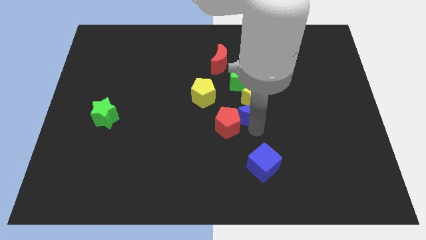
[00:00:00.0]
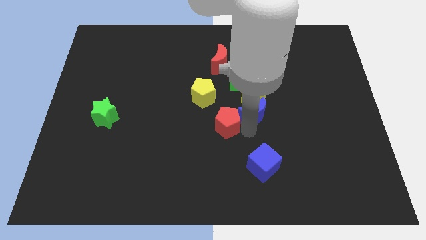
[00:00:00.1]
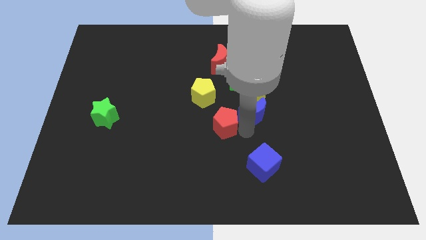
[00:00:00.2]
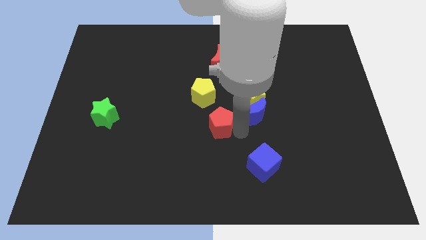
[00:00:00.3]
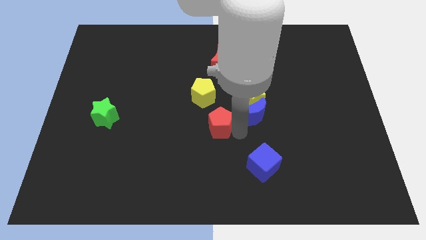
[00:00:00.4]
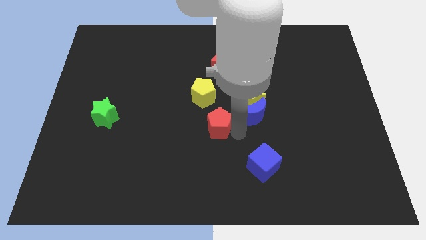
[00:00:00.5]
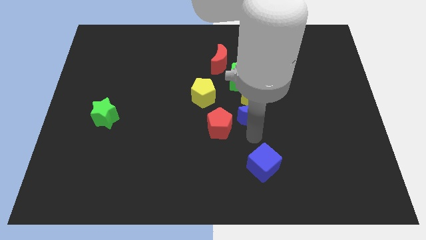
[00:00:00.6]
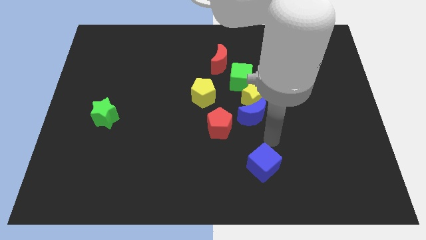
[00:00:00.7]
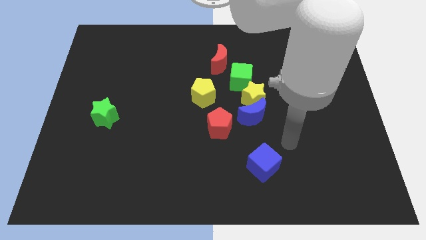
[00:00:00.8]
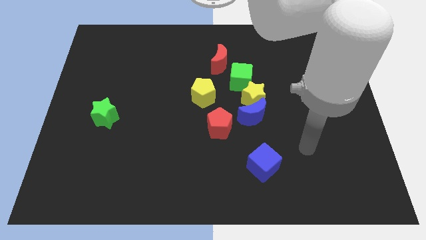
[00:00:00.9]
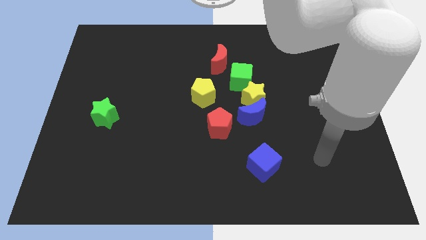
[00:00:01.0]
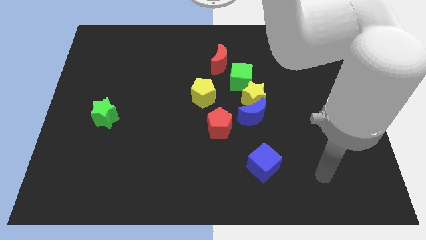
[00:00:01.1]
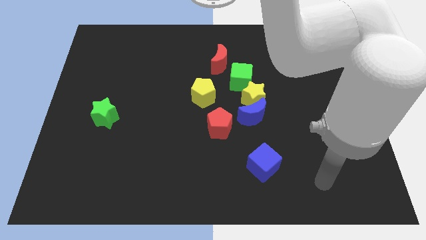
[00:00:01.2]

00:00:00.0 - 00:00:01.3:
push the red pentagon slightly to the left side of the blue crescent

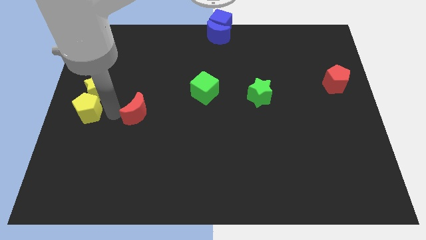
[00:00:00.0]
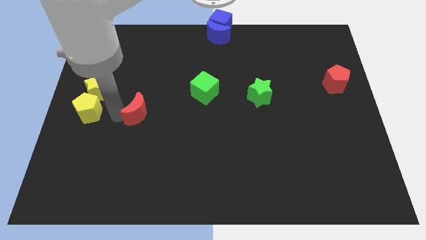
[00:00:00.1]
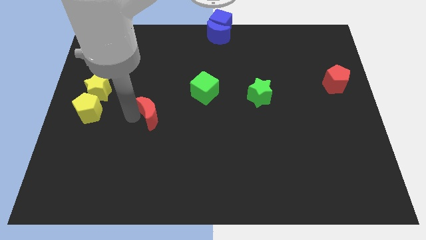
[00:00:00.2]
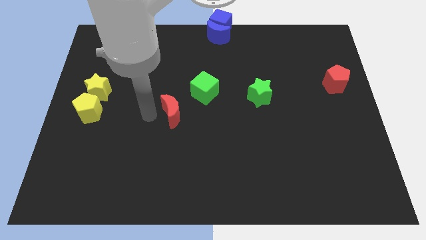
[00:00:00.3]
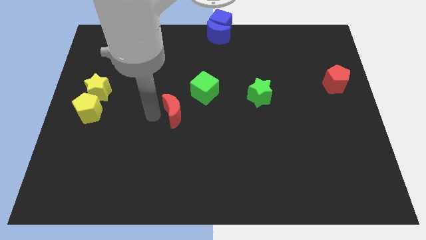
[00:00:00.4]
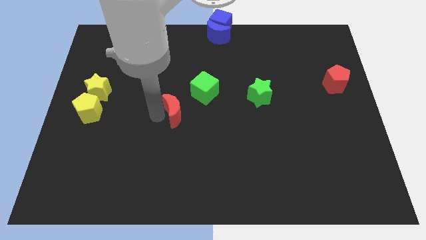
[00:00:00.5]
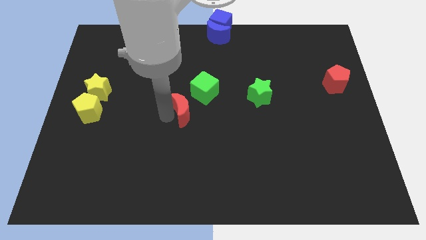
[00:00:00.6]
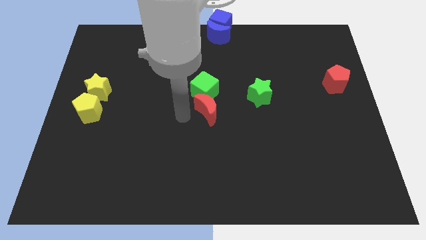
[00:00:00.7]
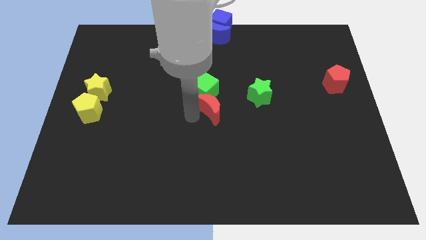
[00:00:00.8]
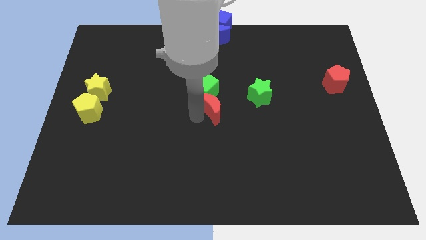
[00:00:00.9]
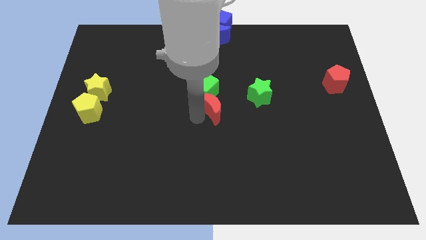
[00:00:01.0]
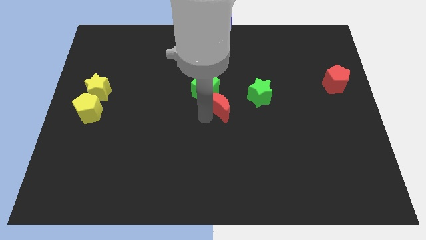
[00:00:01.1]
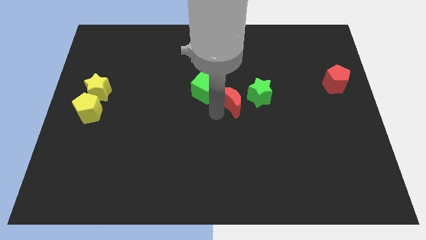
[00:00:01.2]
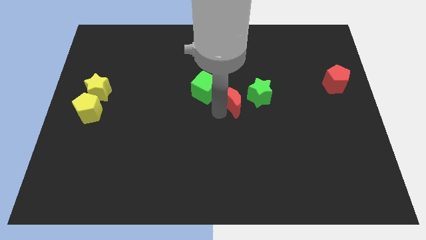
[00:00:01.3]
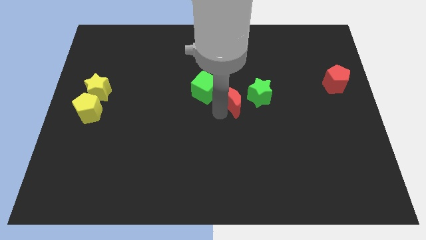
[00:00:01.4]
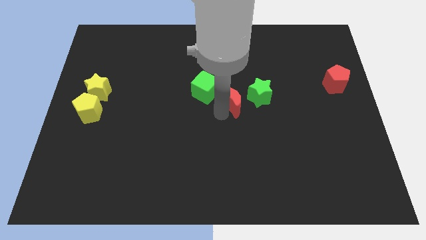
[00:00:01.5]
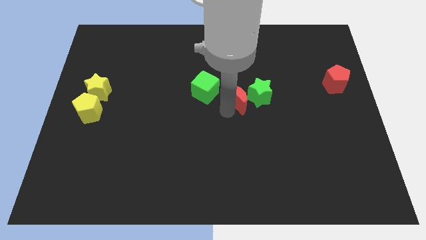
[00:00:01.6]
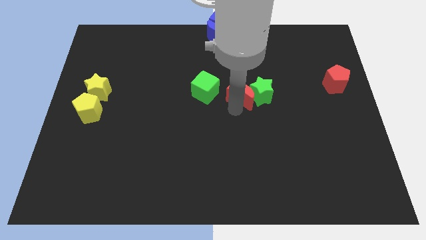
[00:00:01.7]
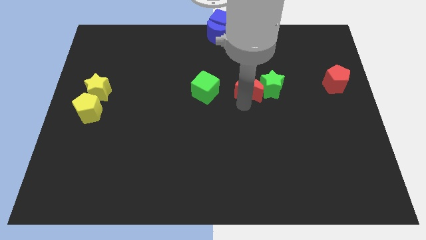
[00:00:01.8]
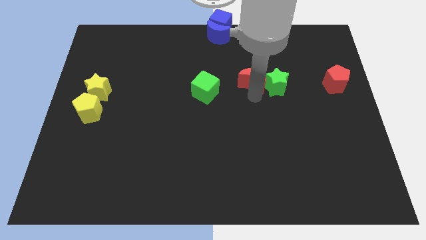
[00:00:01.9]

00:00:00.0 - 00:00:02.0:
push the red crescent into green star

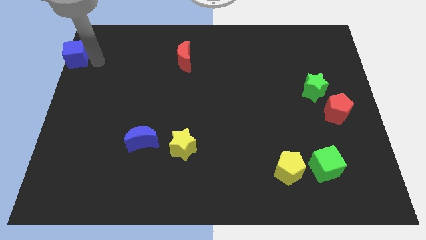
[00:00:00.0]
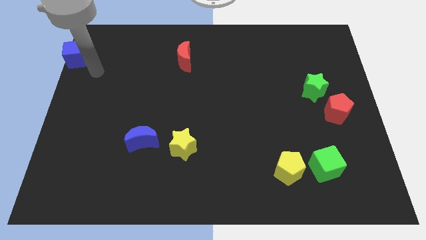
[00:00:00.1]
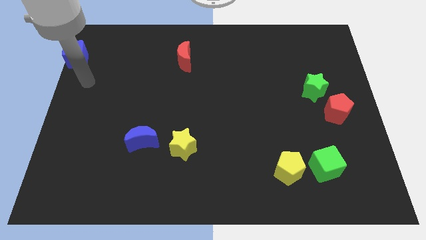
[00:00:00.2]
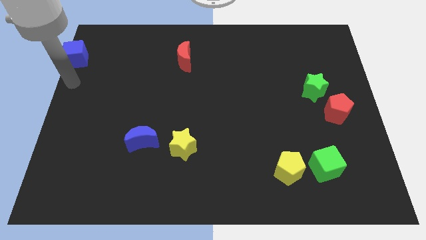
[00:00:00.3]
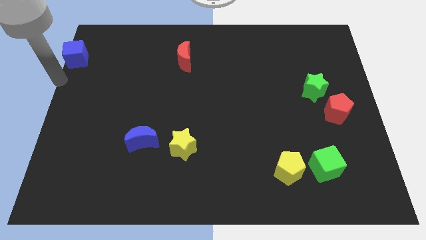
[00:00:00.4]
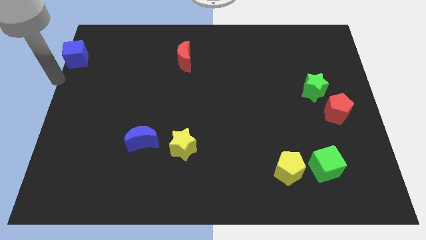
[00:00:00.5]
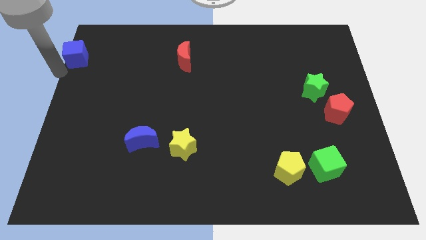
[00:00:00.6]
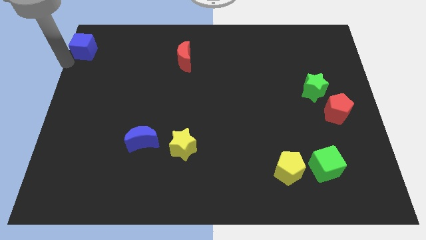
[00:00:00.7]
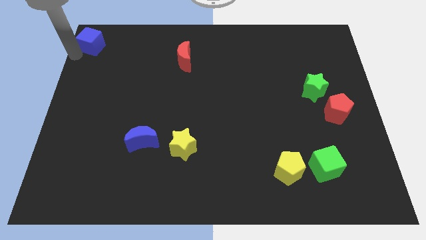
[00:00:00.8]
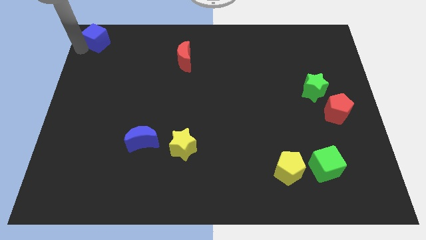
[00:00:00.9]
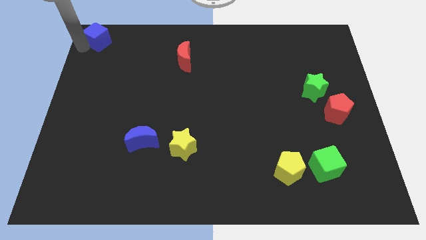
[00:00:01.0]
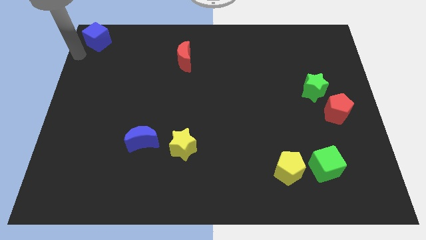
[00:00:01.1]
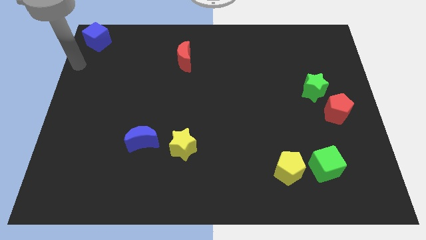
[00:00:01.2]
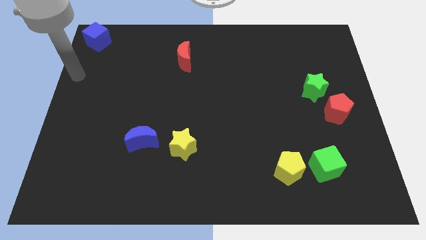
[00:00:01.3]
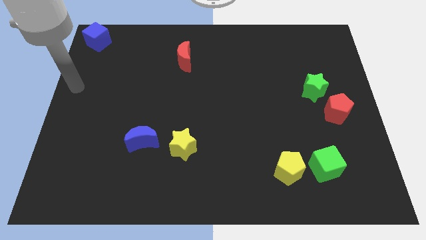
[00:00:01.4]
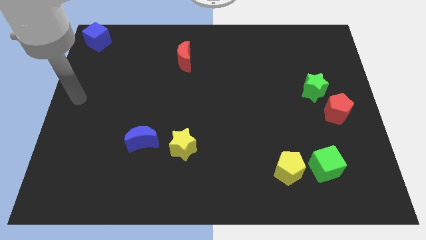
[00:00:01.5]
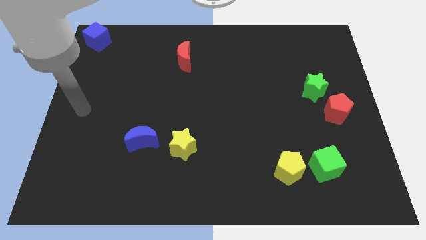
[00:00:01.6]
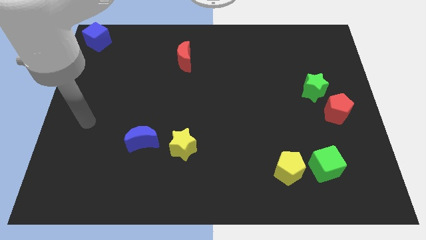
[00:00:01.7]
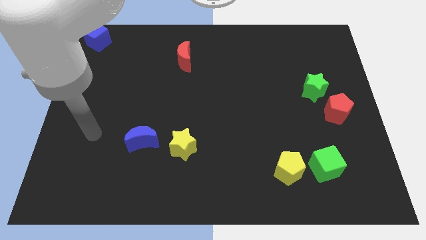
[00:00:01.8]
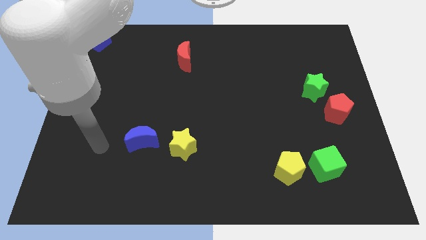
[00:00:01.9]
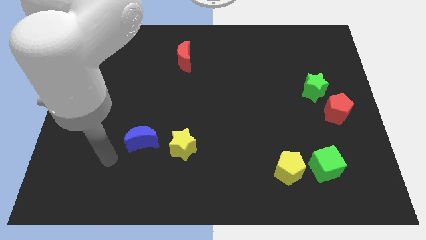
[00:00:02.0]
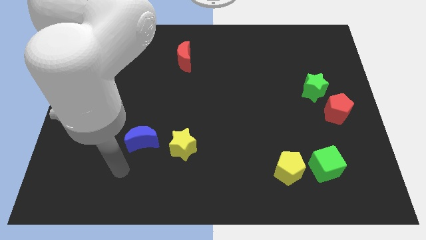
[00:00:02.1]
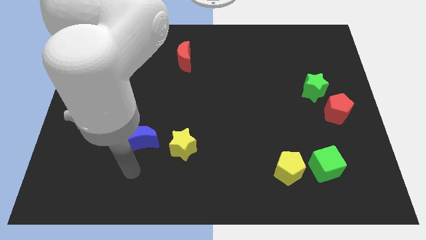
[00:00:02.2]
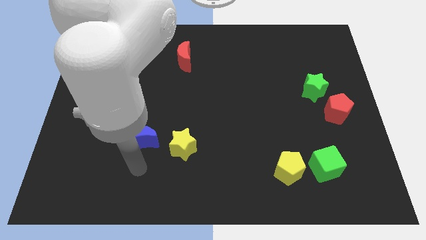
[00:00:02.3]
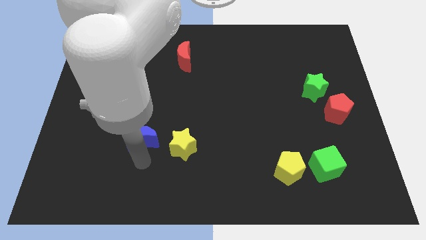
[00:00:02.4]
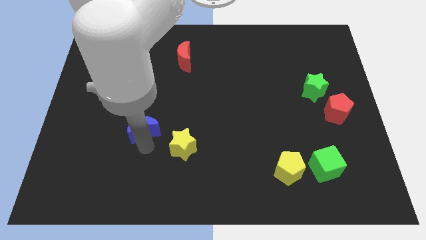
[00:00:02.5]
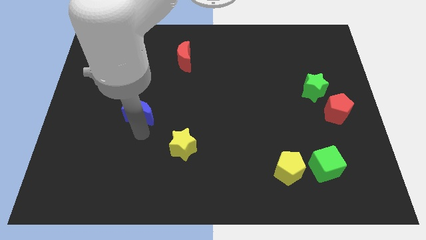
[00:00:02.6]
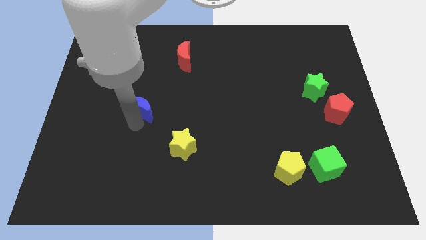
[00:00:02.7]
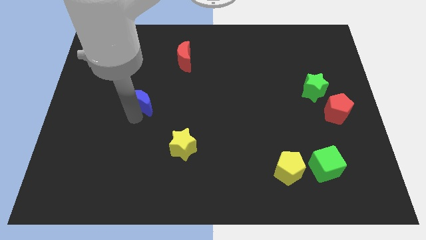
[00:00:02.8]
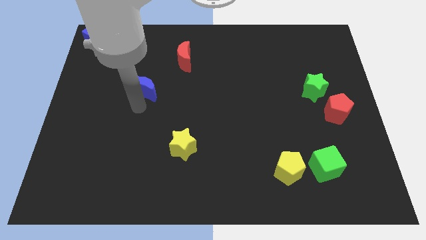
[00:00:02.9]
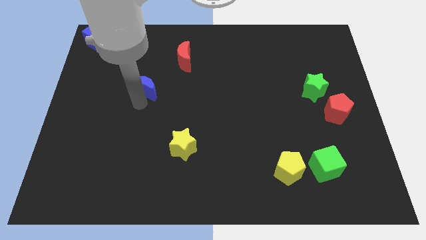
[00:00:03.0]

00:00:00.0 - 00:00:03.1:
place the blue moon at the corner to the top left corner

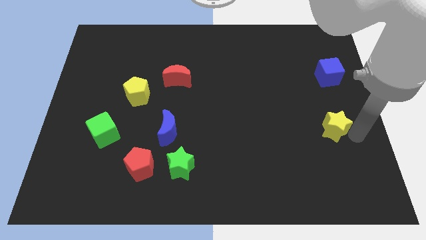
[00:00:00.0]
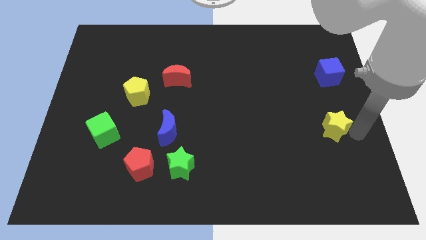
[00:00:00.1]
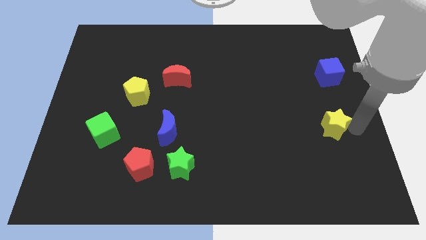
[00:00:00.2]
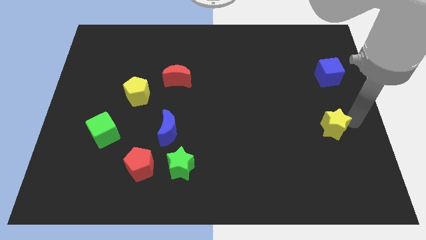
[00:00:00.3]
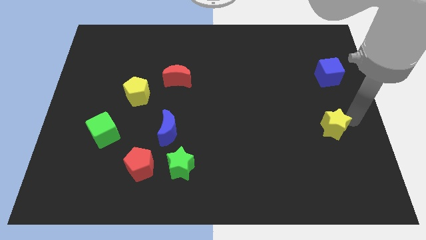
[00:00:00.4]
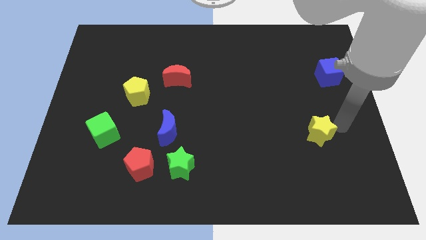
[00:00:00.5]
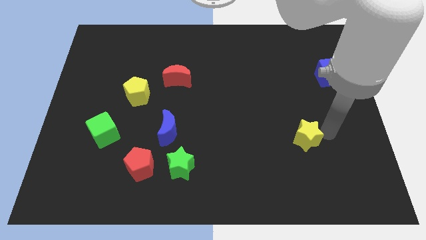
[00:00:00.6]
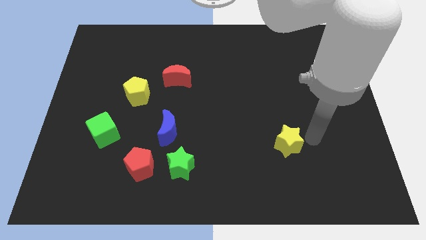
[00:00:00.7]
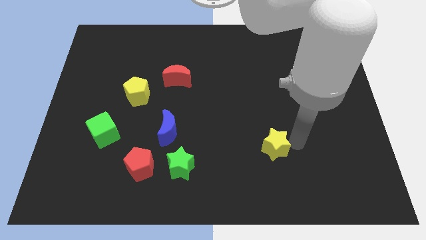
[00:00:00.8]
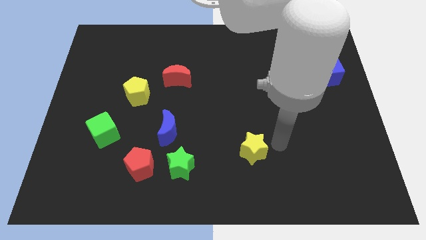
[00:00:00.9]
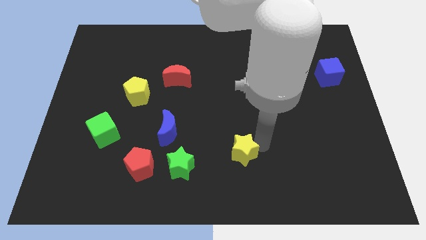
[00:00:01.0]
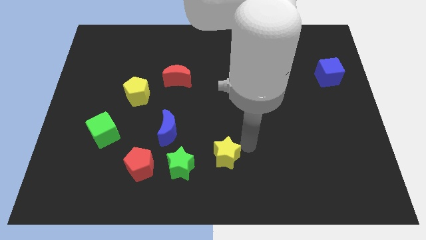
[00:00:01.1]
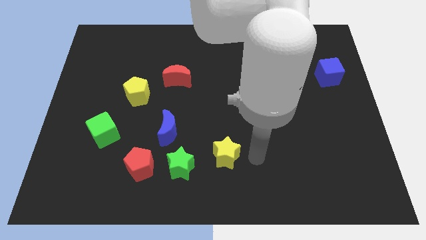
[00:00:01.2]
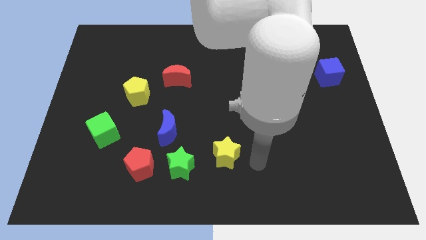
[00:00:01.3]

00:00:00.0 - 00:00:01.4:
push the yellow star to the right of the green star

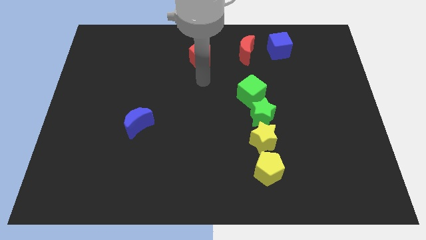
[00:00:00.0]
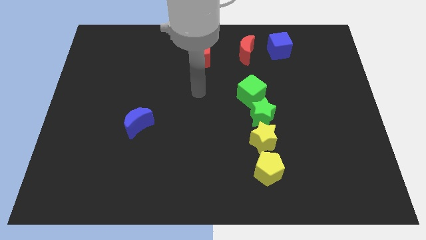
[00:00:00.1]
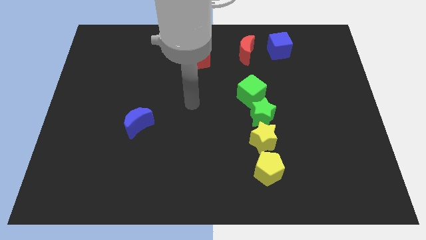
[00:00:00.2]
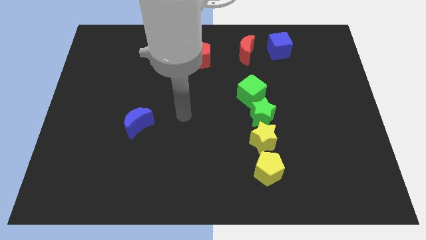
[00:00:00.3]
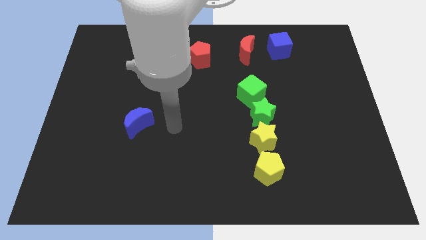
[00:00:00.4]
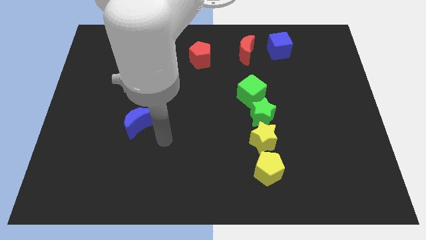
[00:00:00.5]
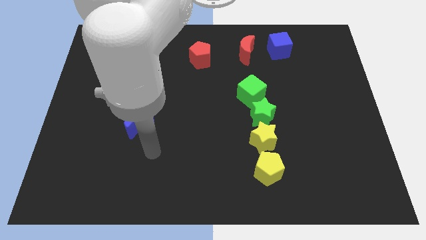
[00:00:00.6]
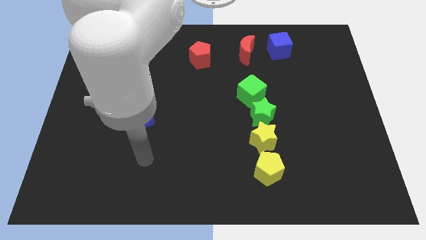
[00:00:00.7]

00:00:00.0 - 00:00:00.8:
move your arm near the blue moon

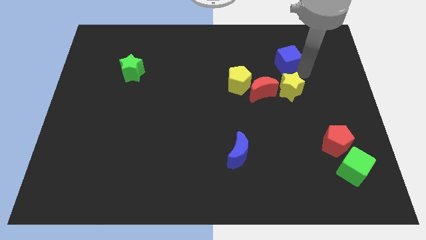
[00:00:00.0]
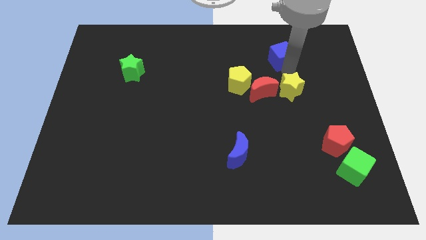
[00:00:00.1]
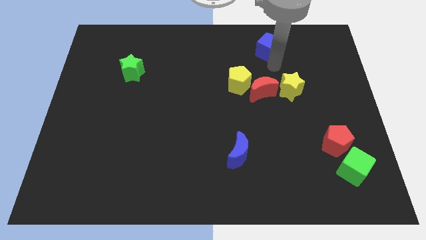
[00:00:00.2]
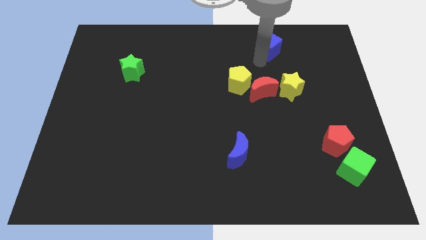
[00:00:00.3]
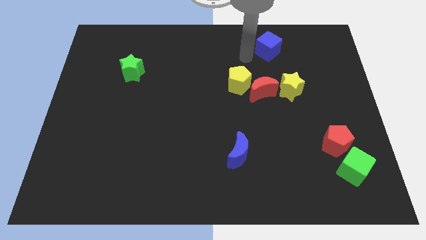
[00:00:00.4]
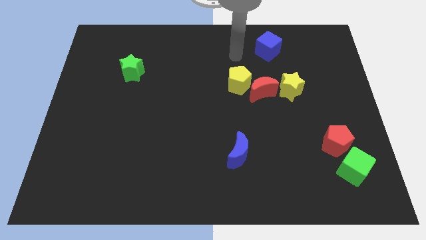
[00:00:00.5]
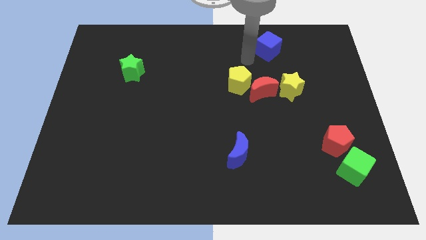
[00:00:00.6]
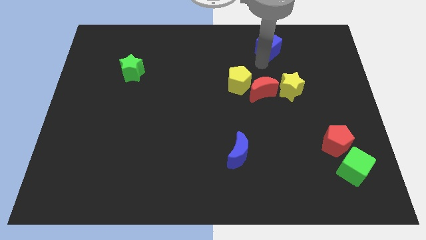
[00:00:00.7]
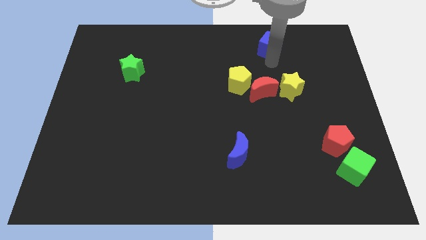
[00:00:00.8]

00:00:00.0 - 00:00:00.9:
move the blue cube to the top of the red crescent
